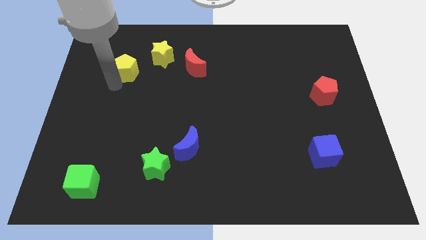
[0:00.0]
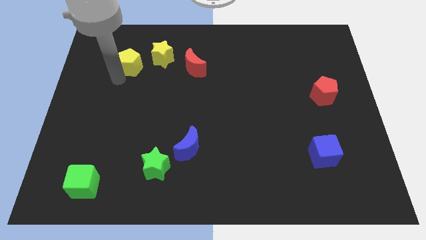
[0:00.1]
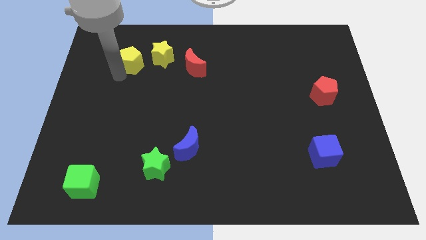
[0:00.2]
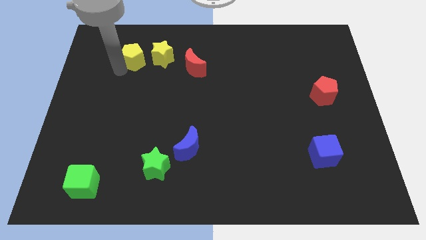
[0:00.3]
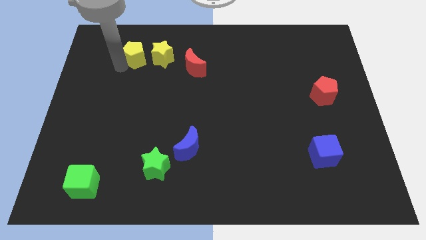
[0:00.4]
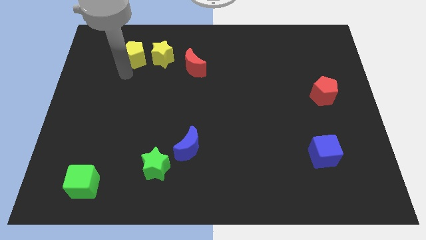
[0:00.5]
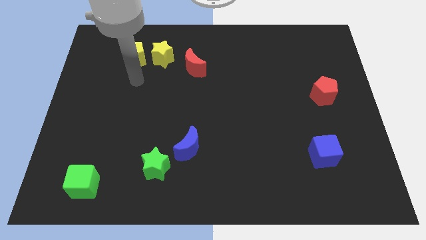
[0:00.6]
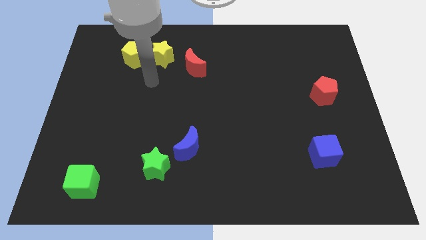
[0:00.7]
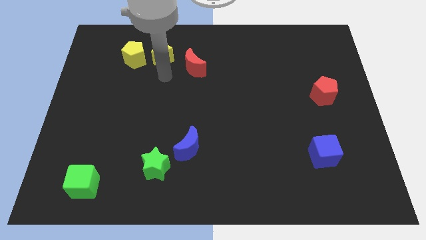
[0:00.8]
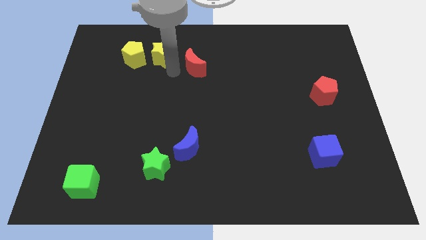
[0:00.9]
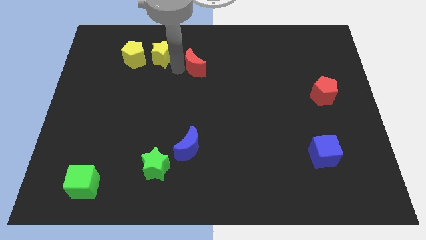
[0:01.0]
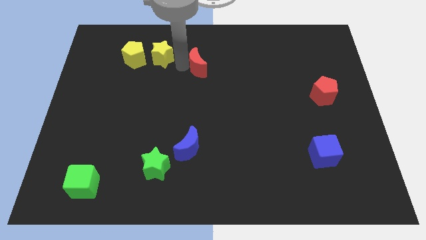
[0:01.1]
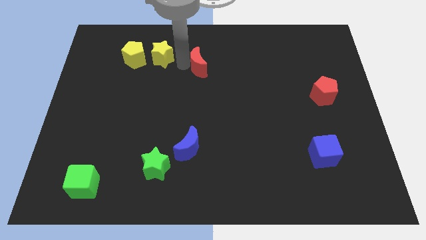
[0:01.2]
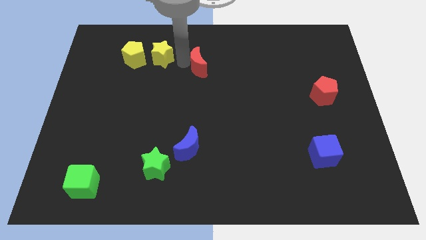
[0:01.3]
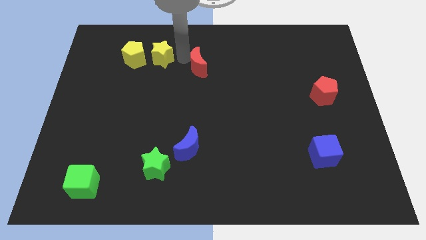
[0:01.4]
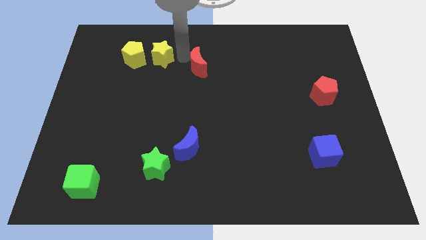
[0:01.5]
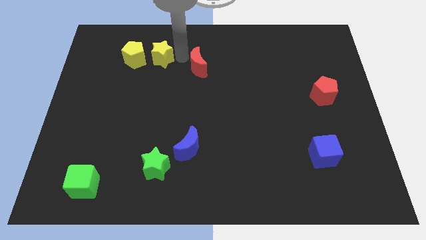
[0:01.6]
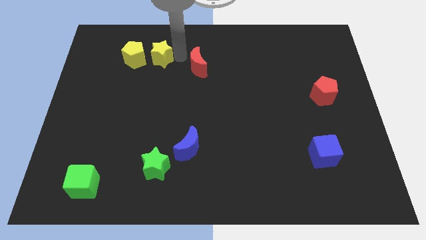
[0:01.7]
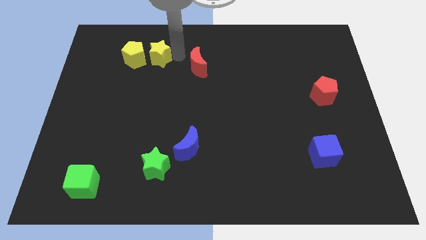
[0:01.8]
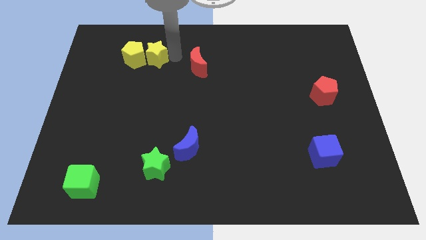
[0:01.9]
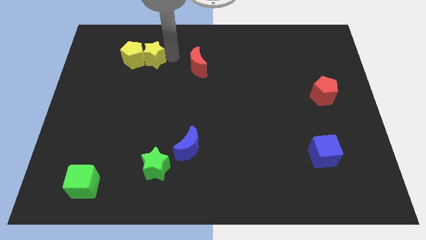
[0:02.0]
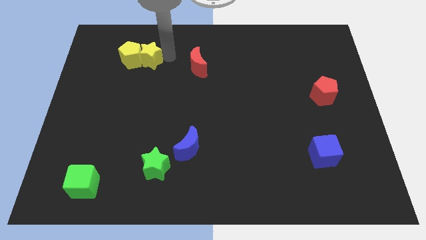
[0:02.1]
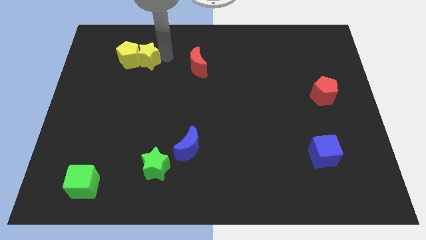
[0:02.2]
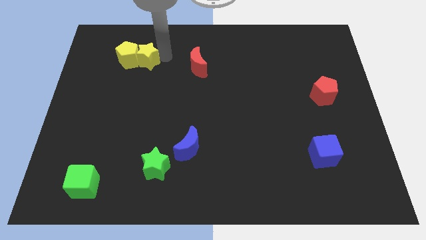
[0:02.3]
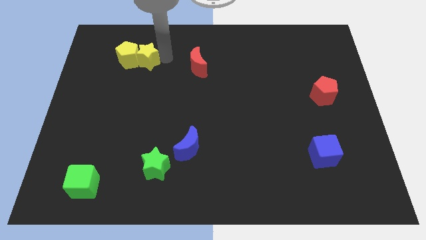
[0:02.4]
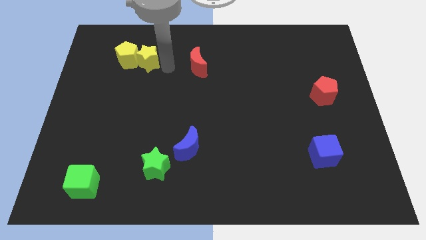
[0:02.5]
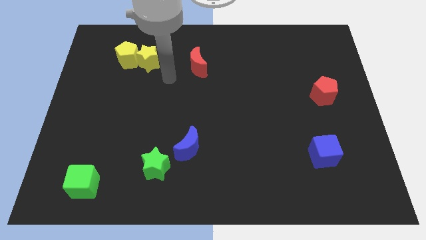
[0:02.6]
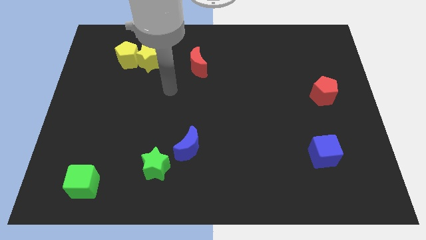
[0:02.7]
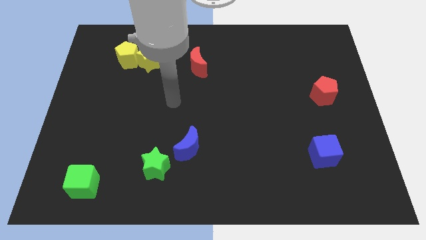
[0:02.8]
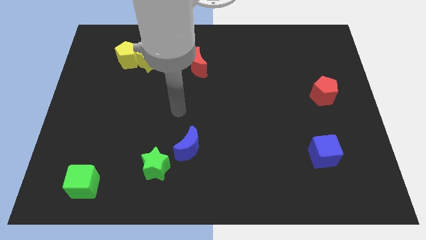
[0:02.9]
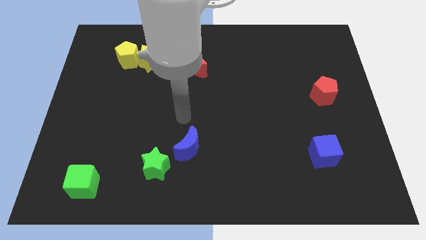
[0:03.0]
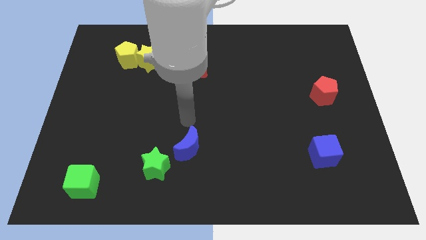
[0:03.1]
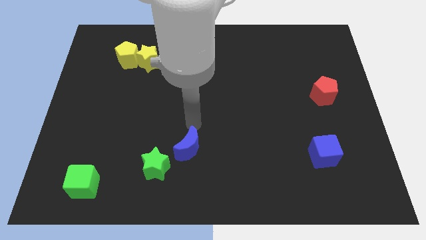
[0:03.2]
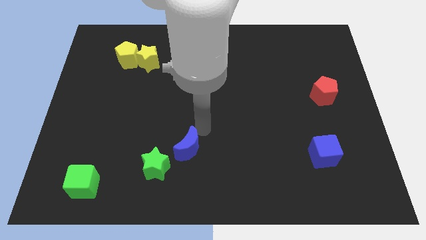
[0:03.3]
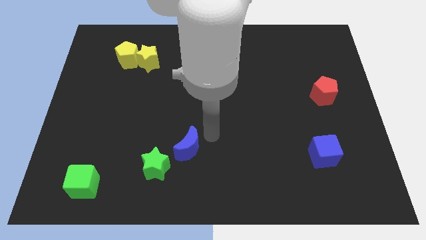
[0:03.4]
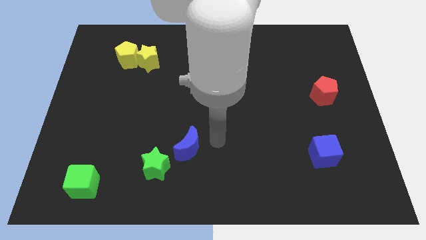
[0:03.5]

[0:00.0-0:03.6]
move the yellow star into the yellow pentagon

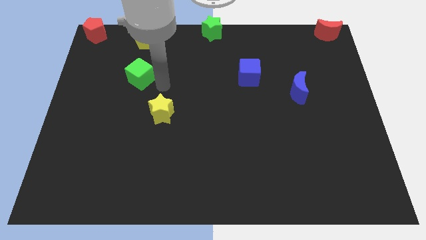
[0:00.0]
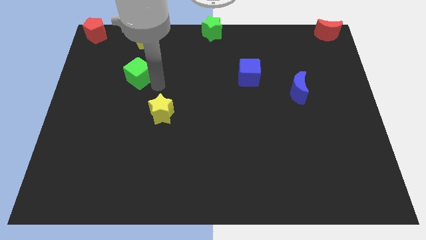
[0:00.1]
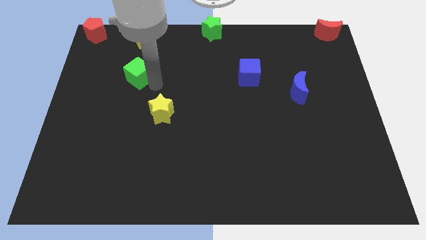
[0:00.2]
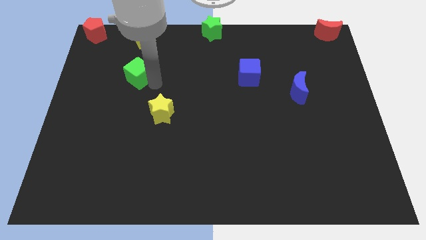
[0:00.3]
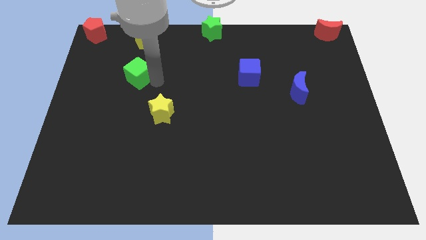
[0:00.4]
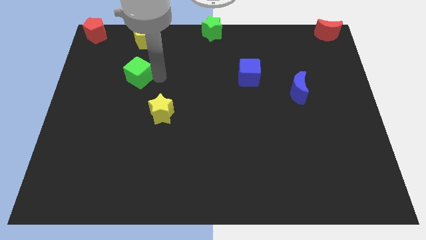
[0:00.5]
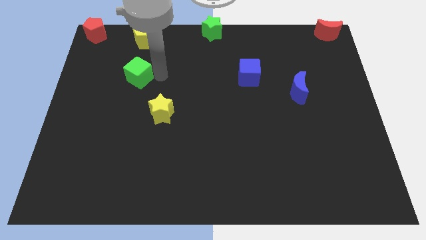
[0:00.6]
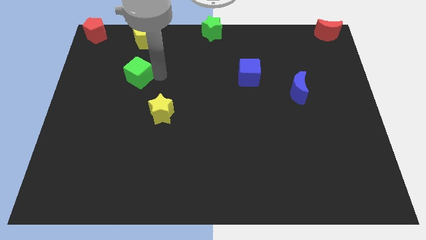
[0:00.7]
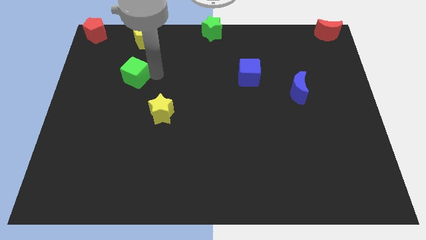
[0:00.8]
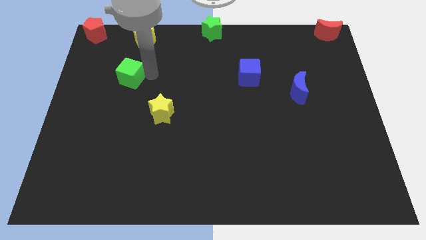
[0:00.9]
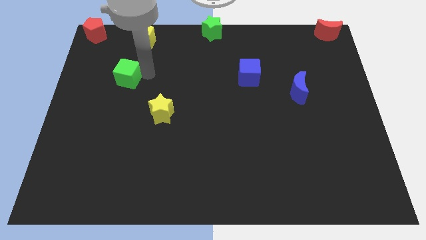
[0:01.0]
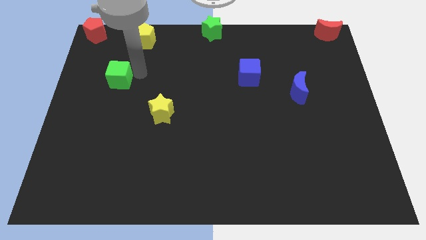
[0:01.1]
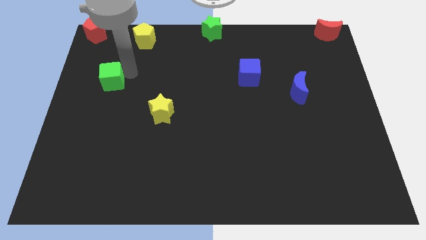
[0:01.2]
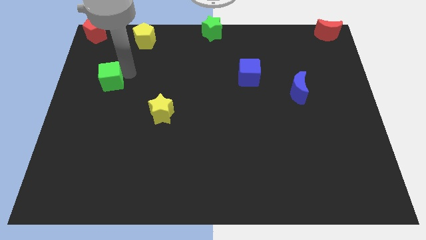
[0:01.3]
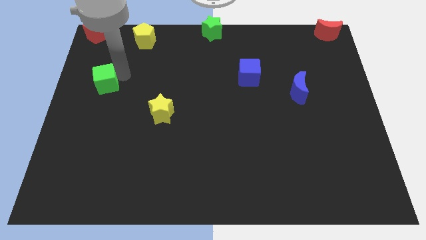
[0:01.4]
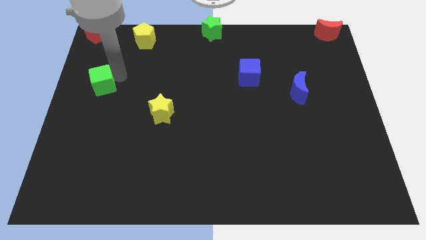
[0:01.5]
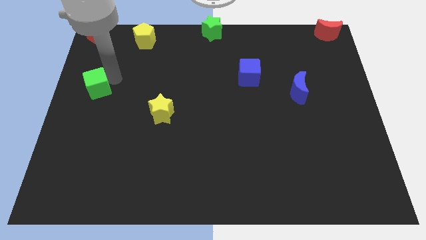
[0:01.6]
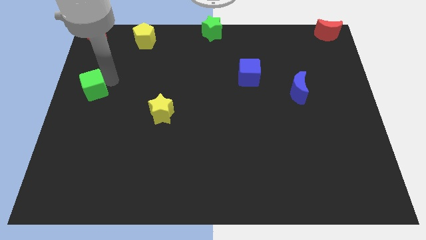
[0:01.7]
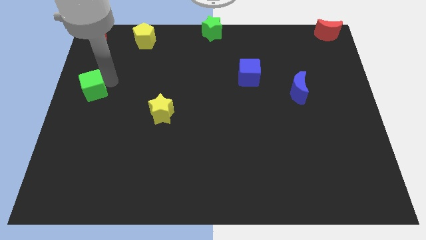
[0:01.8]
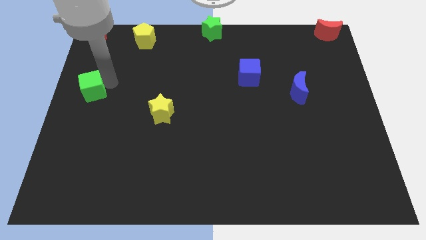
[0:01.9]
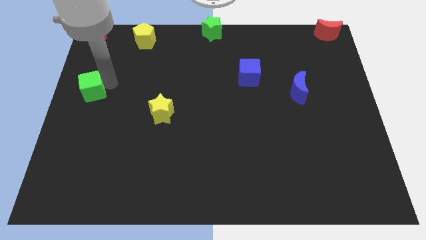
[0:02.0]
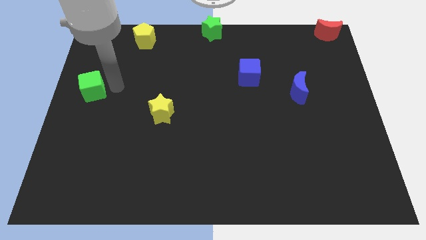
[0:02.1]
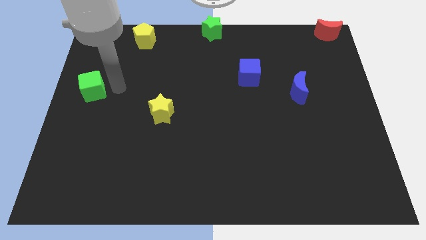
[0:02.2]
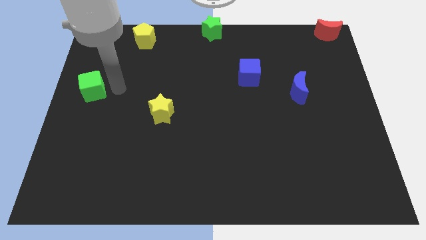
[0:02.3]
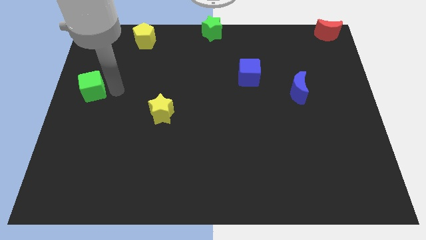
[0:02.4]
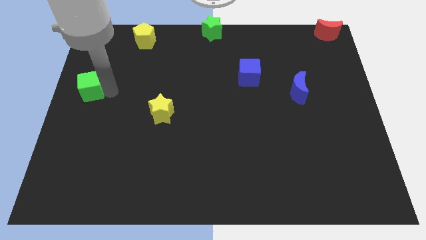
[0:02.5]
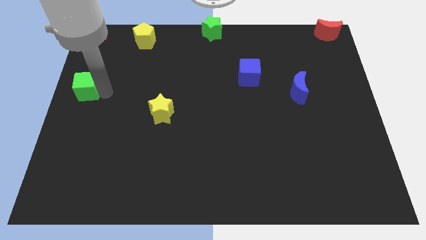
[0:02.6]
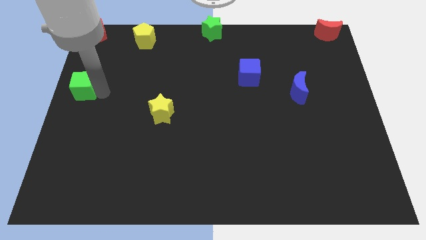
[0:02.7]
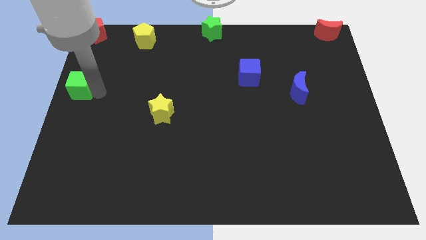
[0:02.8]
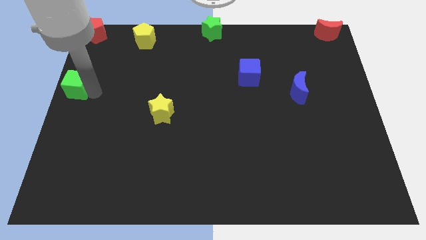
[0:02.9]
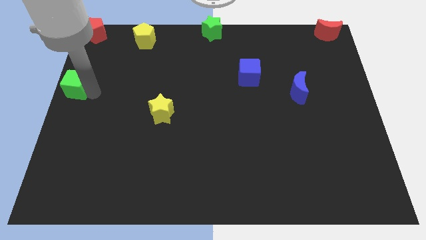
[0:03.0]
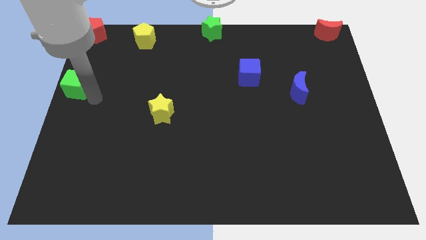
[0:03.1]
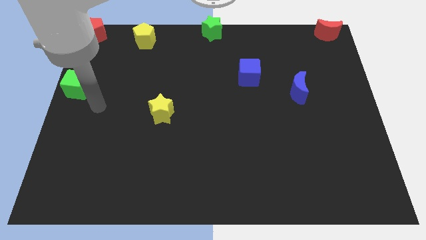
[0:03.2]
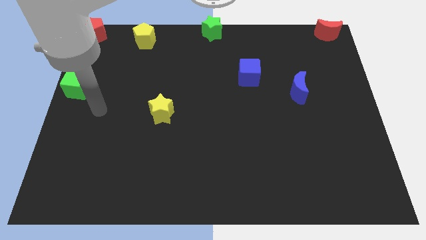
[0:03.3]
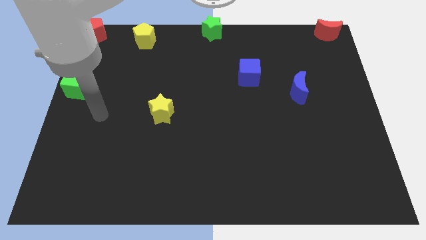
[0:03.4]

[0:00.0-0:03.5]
move the green cube to the vertical bottom side of the red pentagon

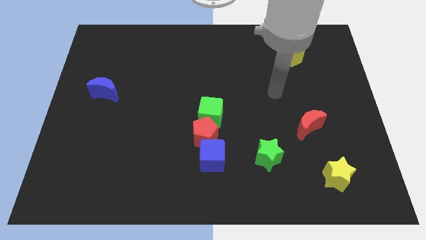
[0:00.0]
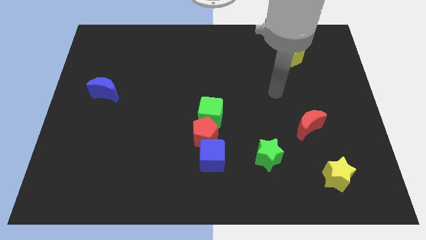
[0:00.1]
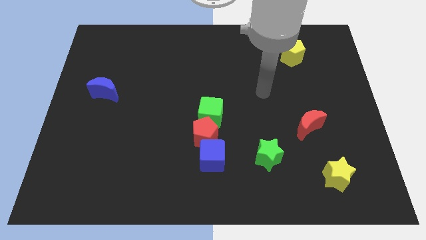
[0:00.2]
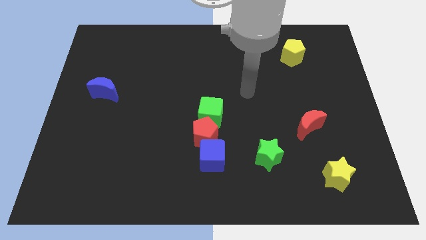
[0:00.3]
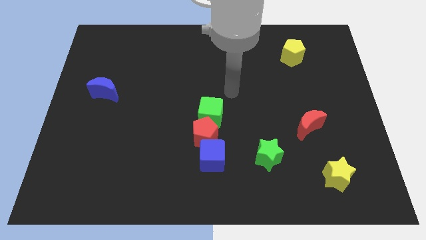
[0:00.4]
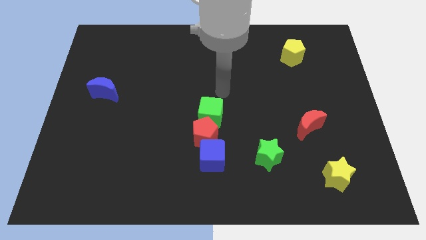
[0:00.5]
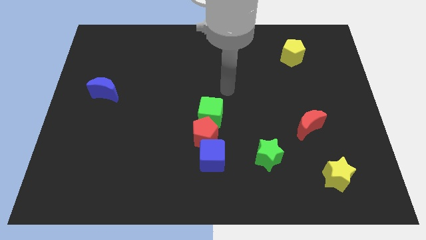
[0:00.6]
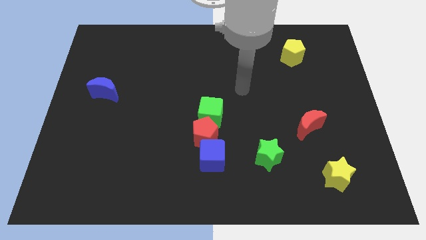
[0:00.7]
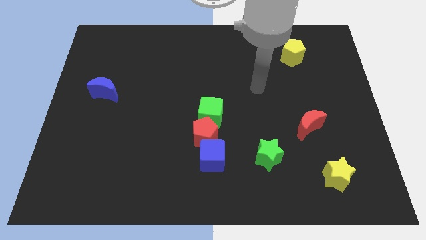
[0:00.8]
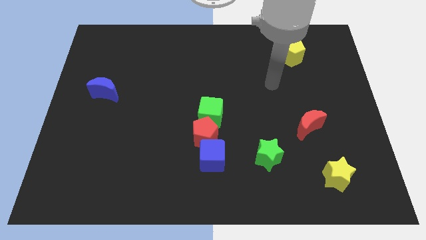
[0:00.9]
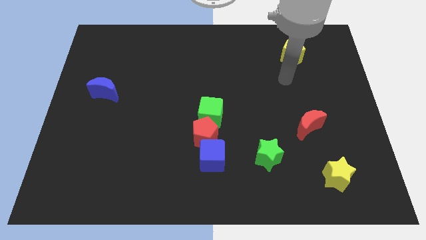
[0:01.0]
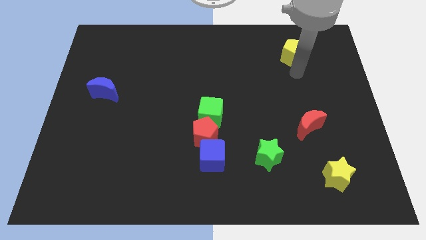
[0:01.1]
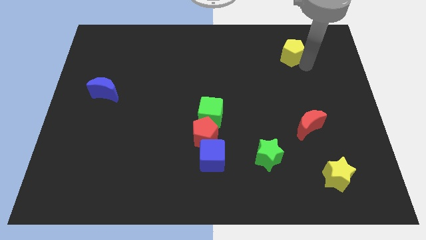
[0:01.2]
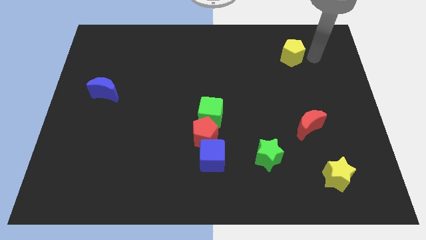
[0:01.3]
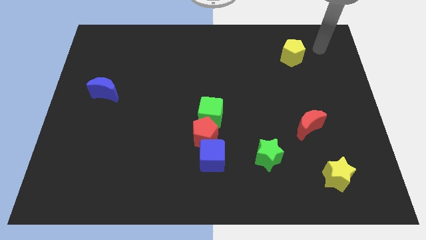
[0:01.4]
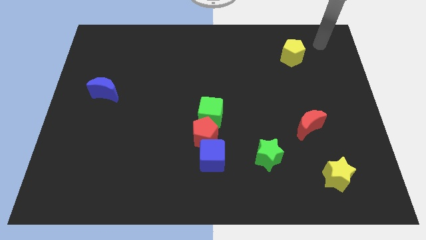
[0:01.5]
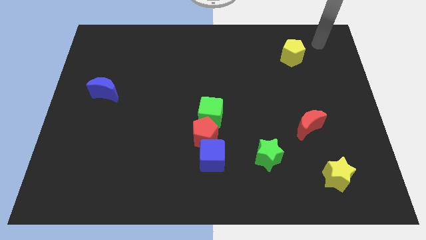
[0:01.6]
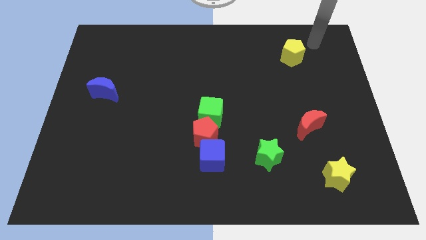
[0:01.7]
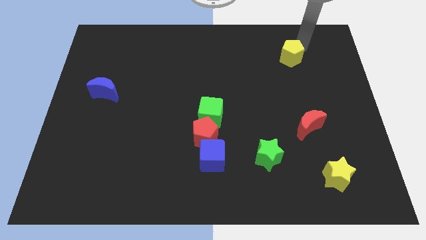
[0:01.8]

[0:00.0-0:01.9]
move your arm close to the yellow pentagon
